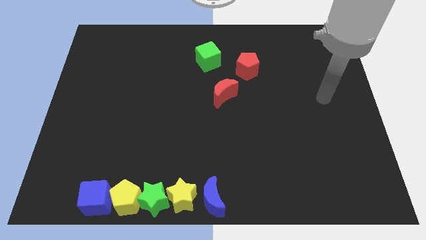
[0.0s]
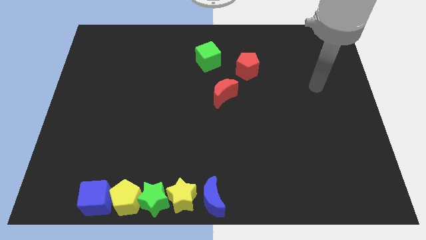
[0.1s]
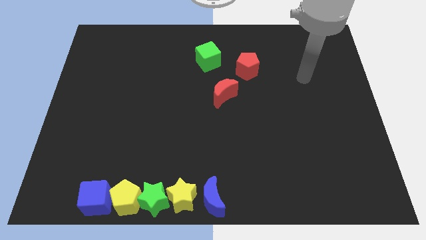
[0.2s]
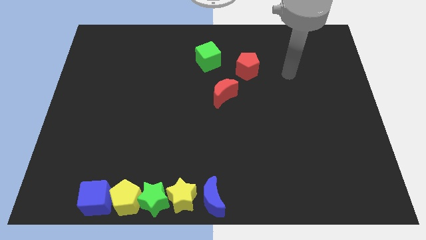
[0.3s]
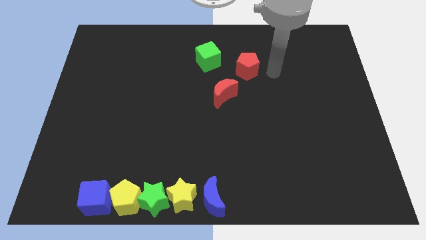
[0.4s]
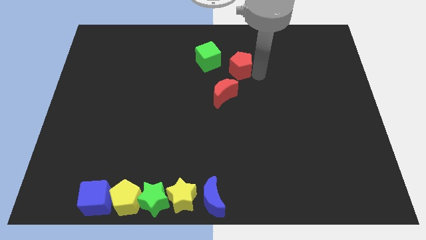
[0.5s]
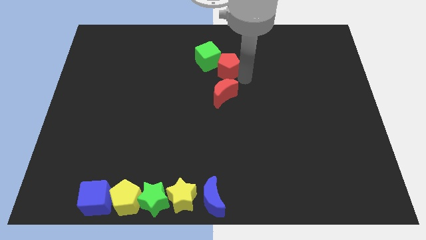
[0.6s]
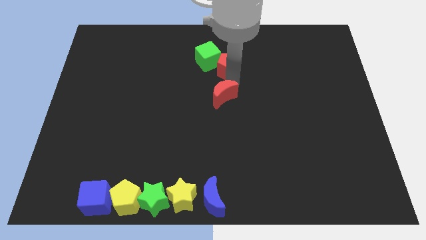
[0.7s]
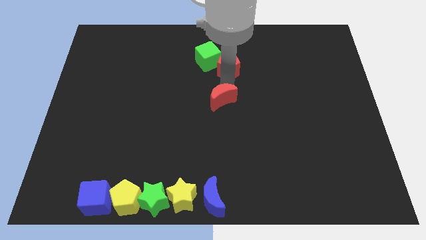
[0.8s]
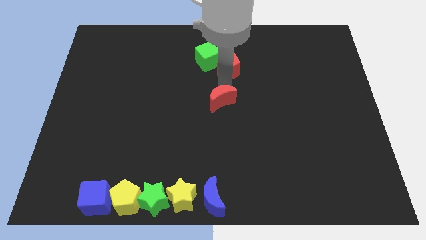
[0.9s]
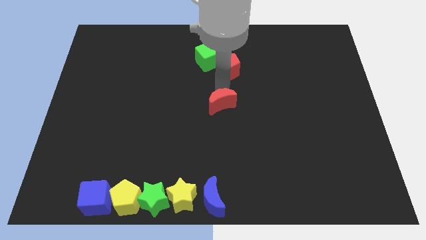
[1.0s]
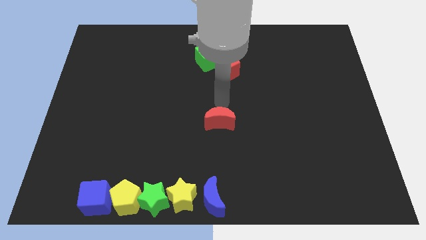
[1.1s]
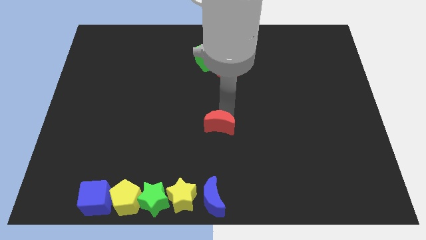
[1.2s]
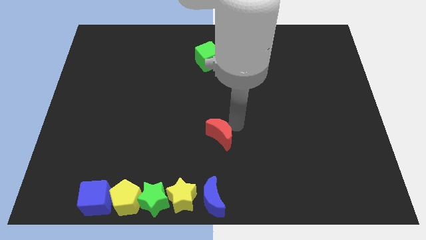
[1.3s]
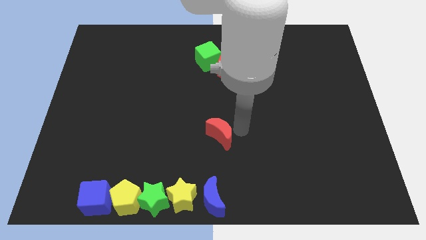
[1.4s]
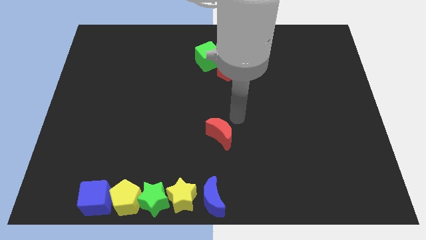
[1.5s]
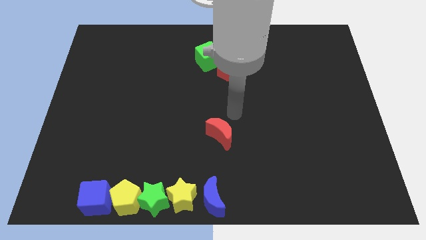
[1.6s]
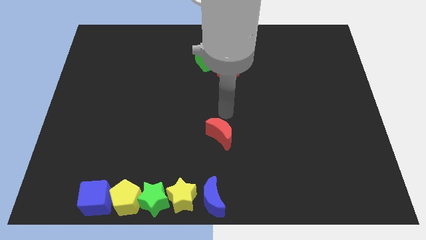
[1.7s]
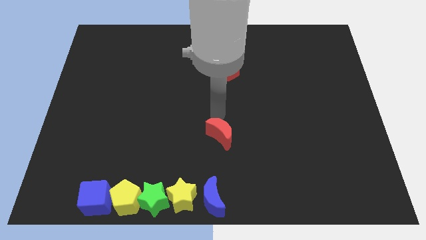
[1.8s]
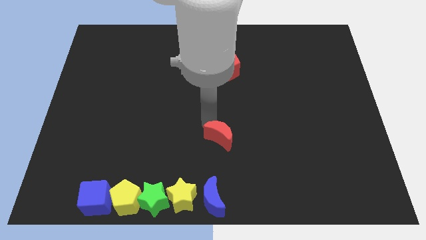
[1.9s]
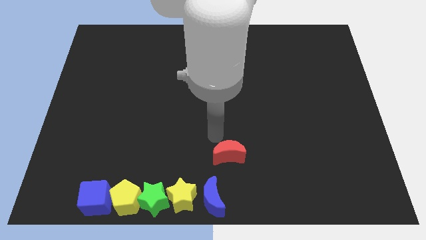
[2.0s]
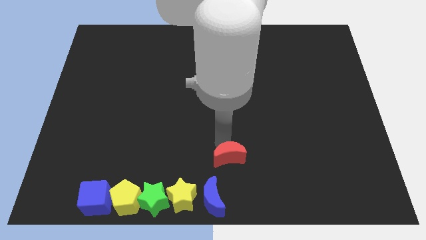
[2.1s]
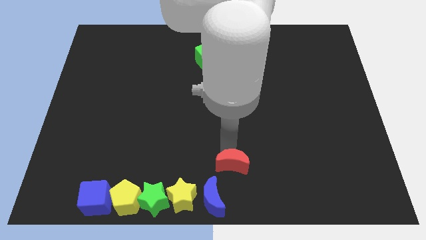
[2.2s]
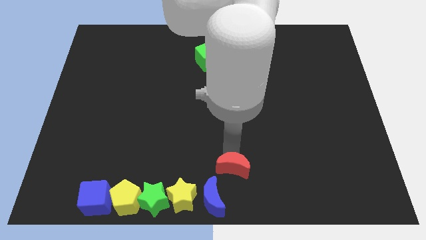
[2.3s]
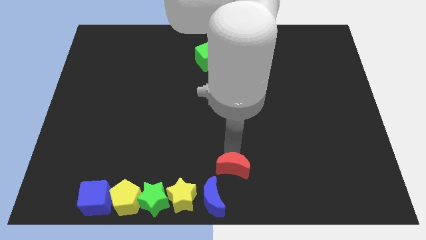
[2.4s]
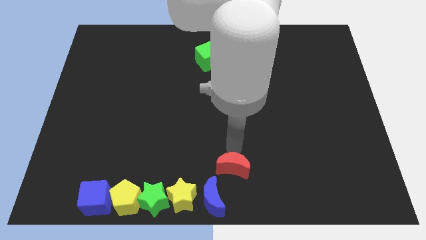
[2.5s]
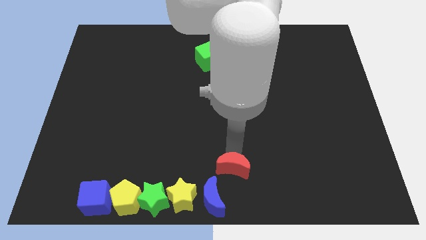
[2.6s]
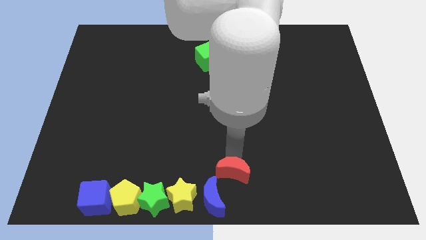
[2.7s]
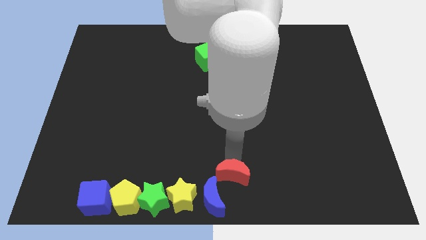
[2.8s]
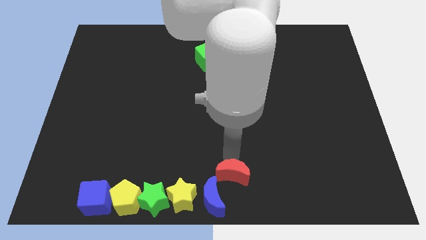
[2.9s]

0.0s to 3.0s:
slide red moon to the right top of the blue moon

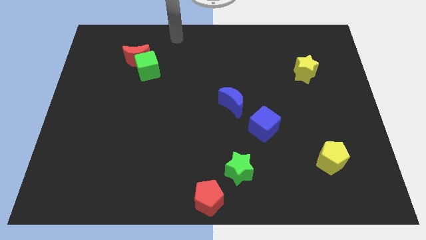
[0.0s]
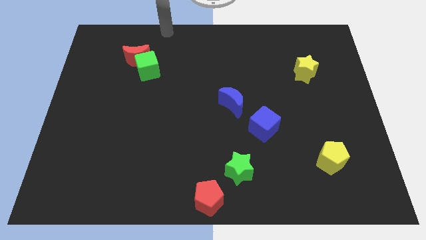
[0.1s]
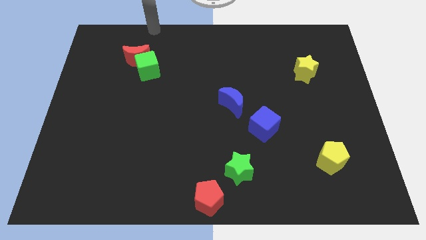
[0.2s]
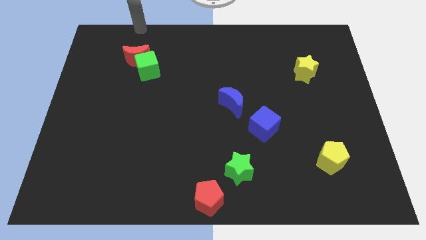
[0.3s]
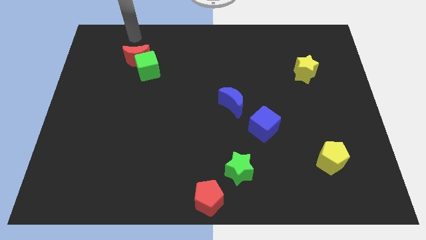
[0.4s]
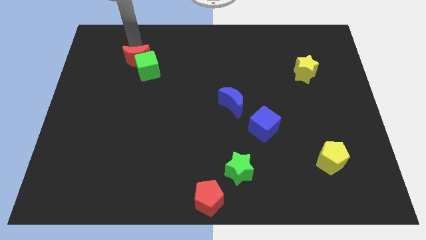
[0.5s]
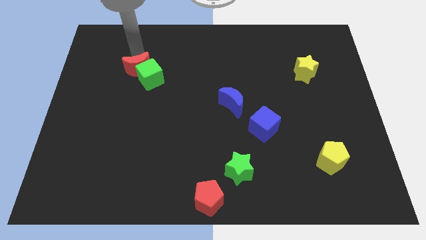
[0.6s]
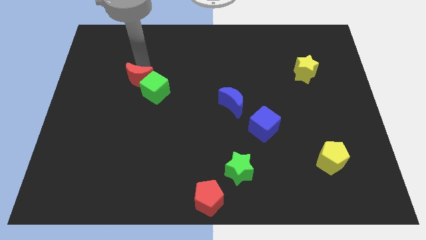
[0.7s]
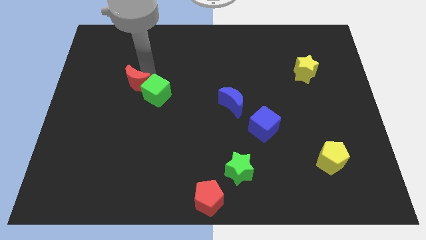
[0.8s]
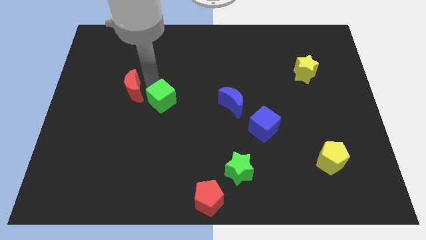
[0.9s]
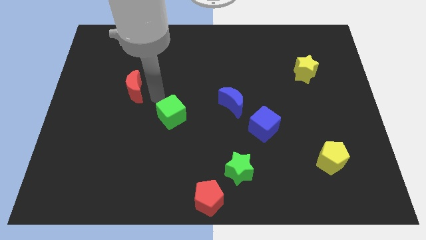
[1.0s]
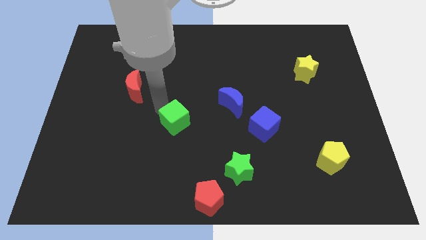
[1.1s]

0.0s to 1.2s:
separate the green cube from red crescent

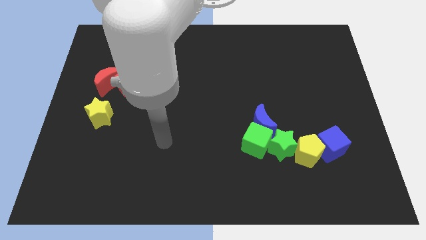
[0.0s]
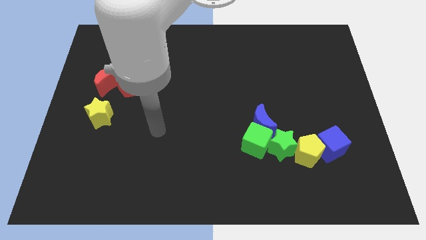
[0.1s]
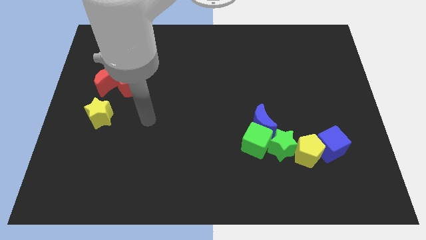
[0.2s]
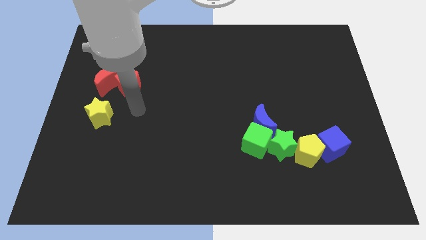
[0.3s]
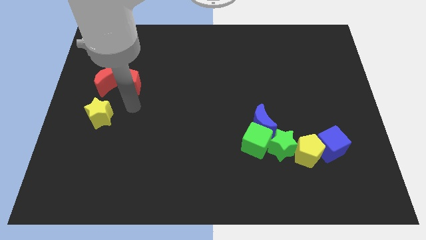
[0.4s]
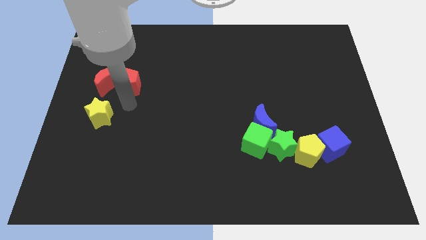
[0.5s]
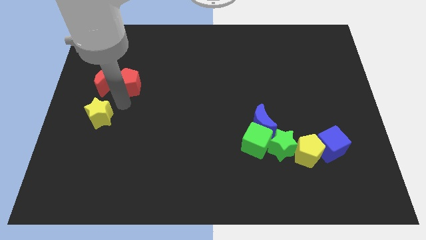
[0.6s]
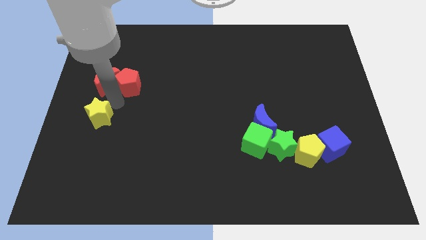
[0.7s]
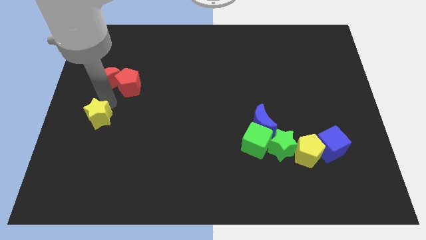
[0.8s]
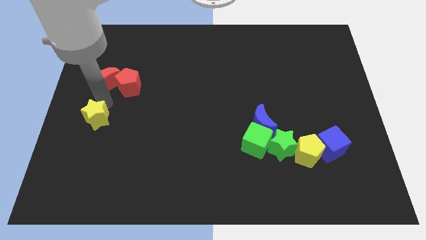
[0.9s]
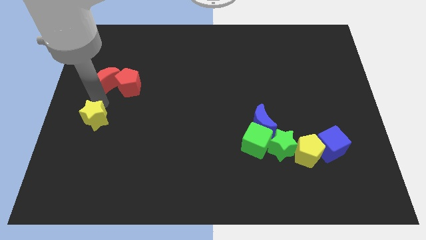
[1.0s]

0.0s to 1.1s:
point your arm at the top of the yellow star

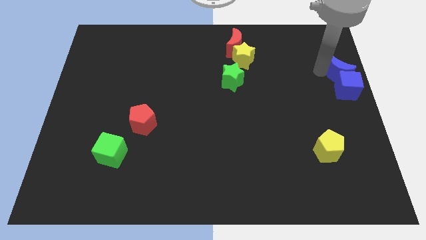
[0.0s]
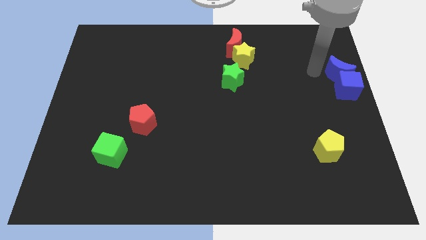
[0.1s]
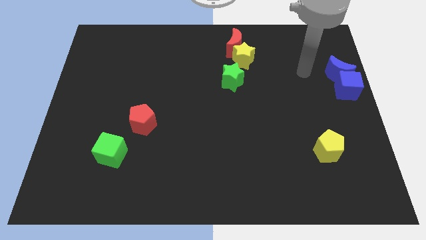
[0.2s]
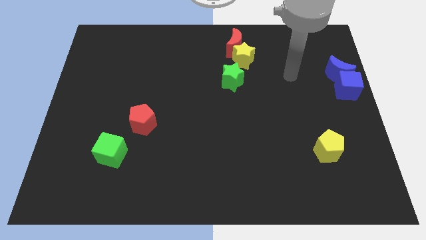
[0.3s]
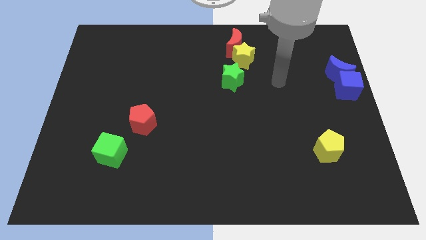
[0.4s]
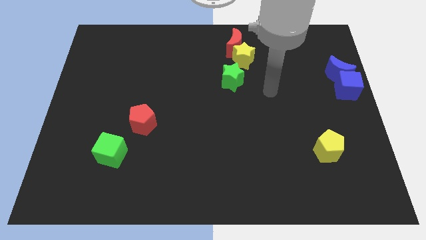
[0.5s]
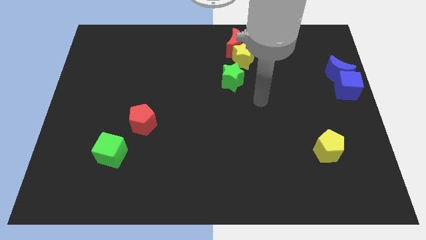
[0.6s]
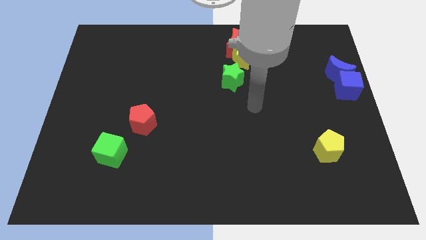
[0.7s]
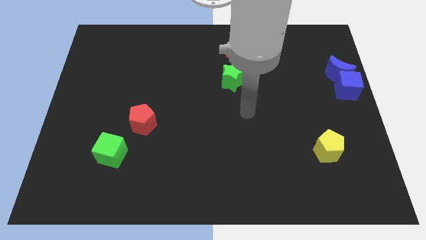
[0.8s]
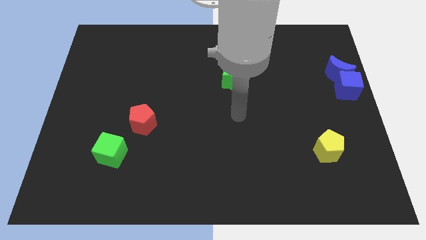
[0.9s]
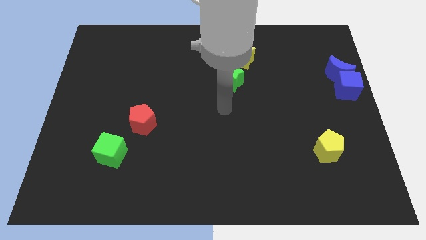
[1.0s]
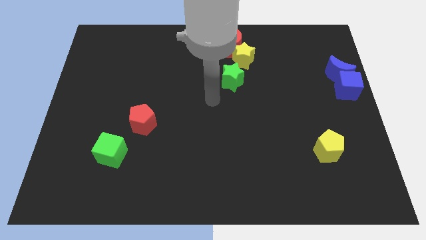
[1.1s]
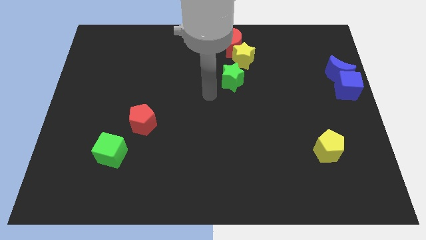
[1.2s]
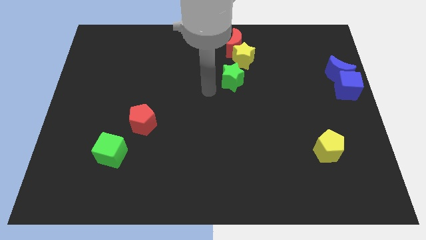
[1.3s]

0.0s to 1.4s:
move your arm away from blue moon

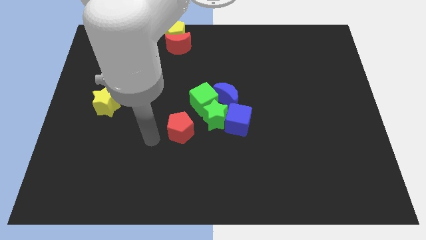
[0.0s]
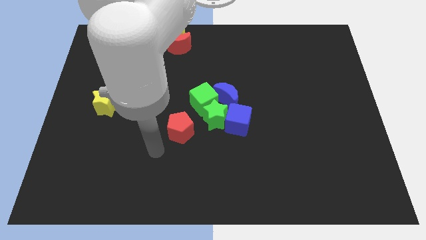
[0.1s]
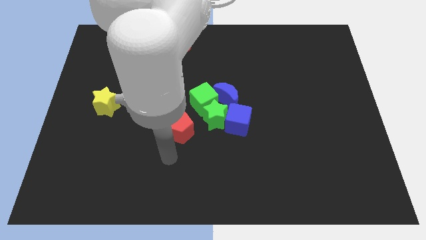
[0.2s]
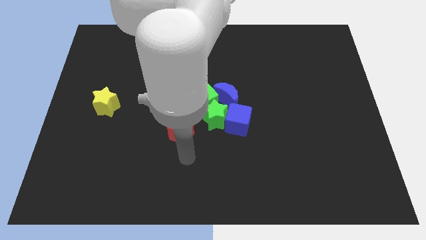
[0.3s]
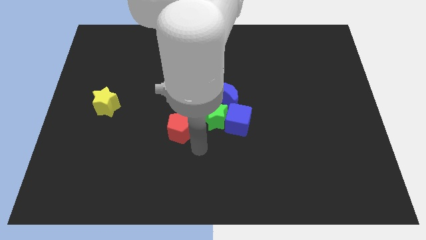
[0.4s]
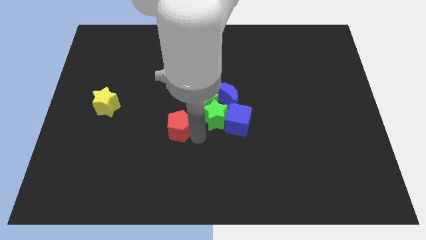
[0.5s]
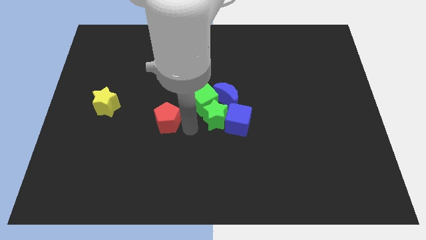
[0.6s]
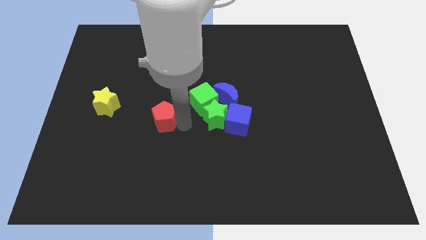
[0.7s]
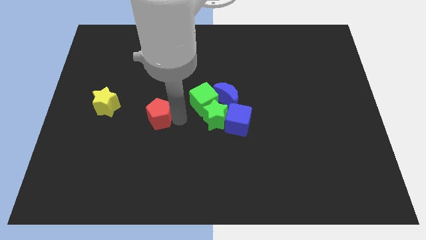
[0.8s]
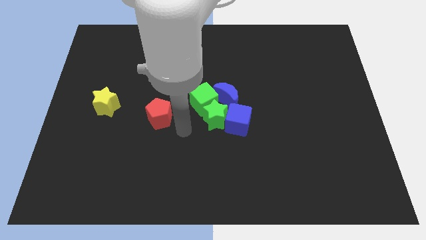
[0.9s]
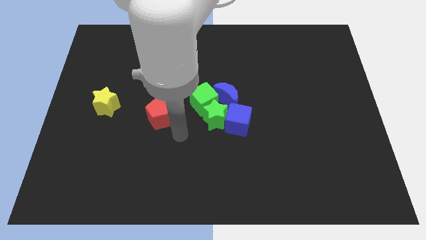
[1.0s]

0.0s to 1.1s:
place the red pentagon to the right side of the yellow star

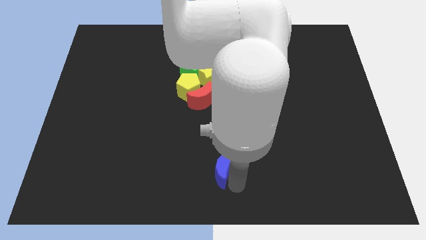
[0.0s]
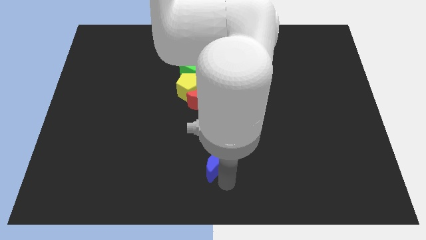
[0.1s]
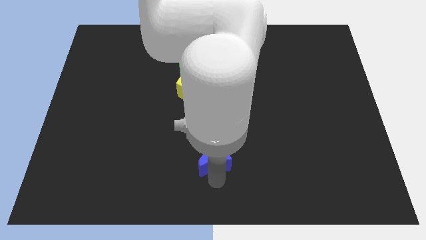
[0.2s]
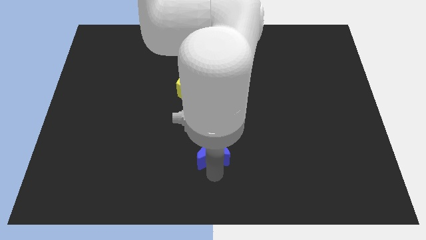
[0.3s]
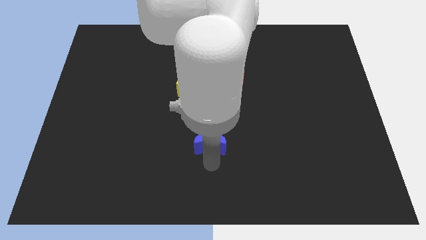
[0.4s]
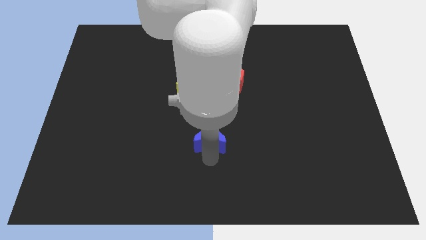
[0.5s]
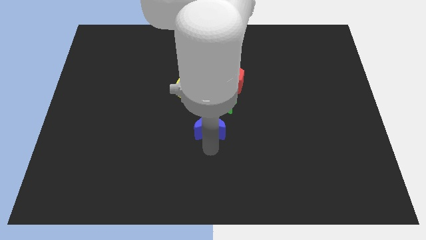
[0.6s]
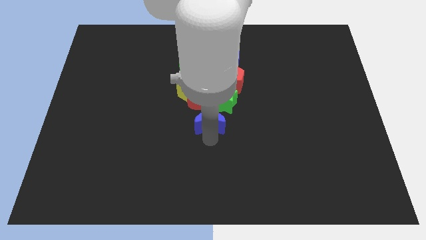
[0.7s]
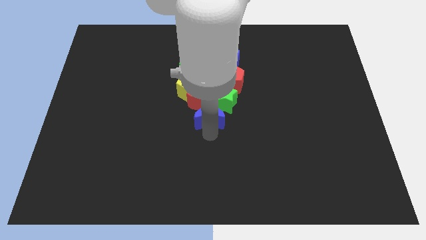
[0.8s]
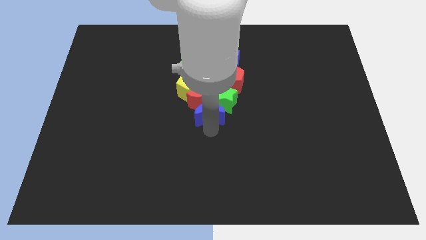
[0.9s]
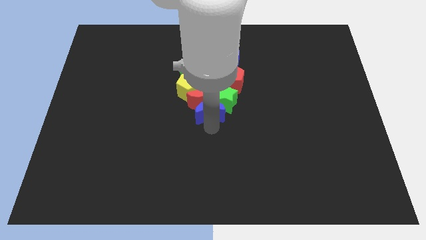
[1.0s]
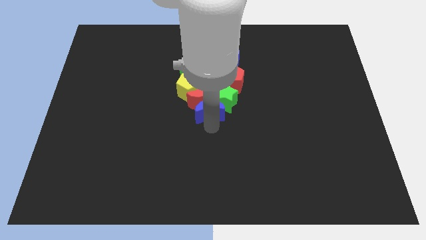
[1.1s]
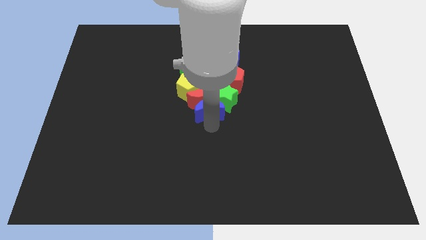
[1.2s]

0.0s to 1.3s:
push blue crescent towards up
